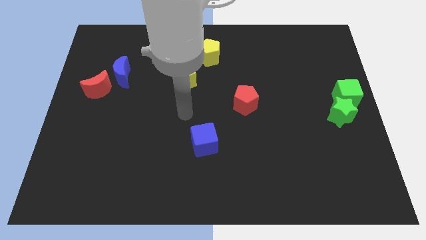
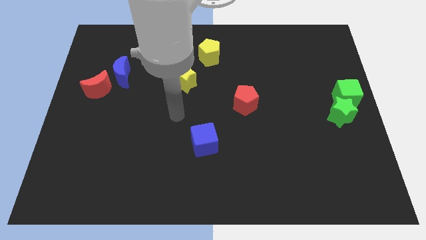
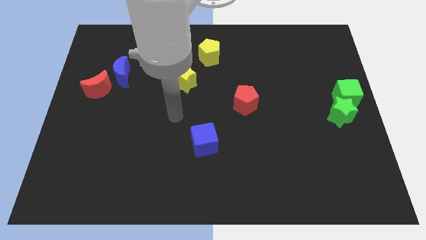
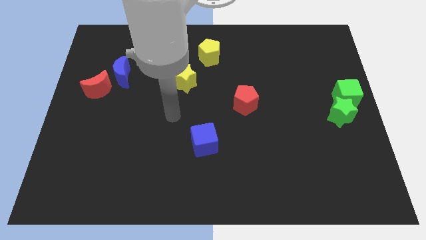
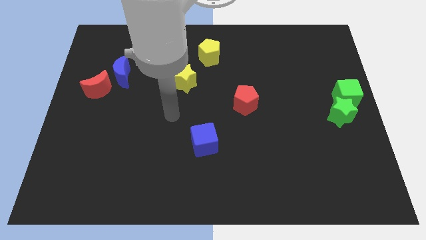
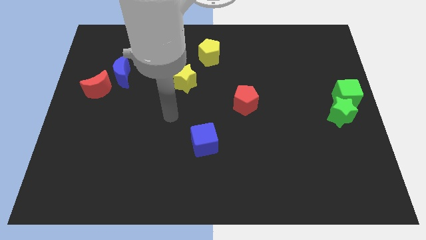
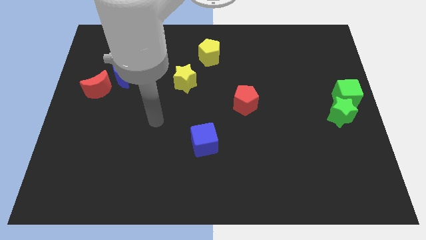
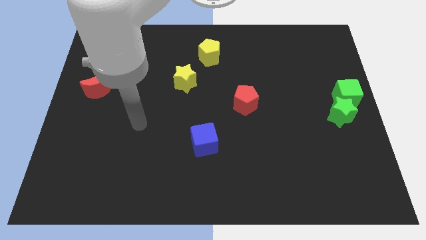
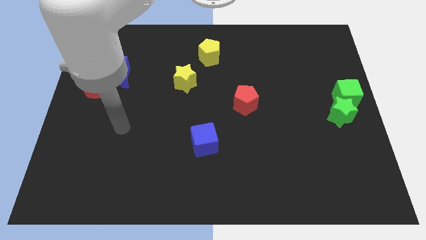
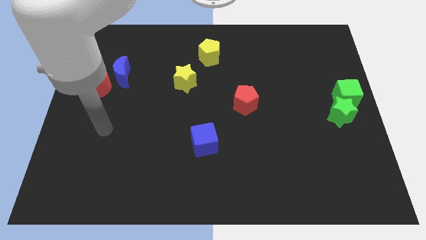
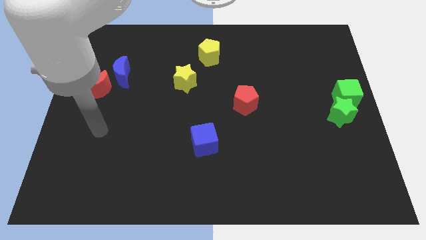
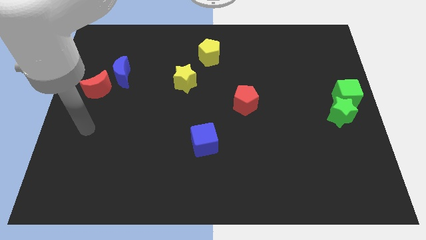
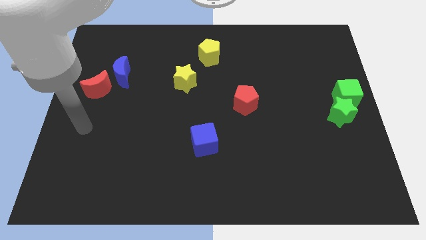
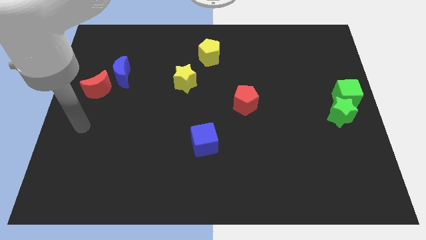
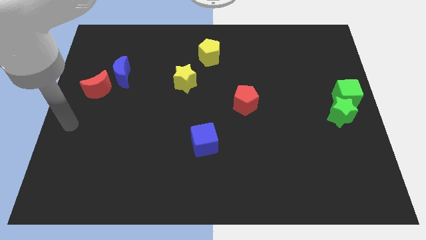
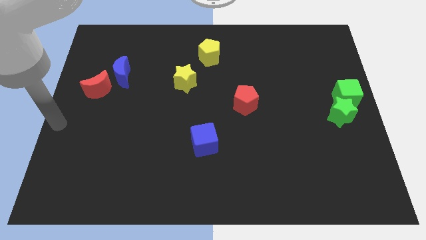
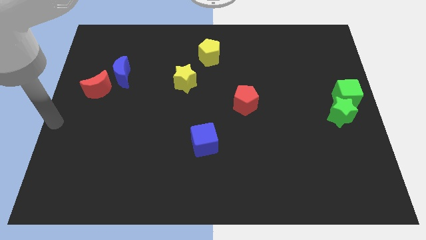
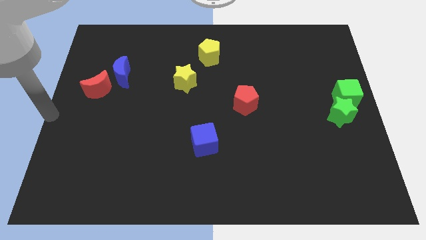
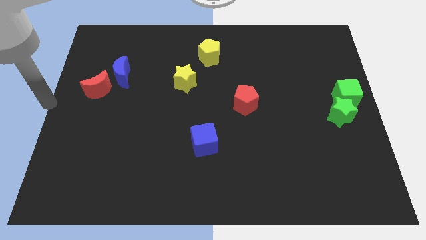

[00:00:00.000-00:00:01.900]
place your arm to the left center

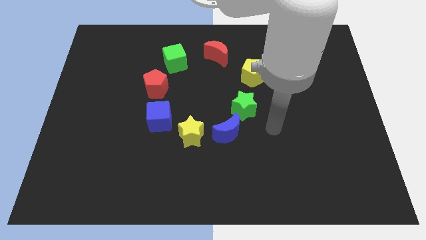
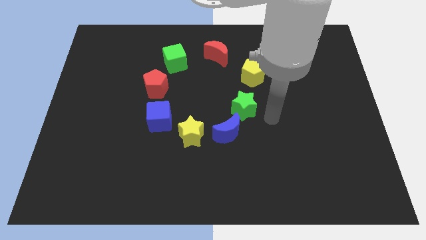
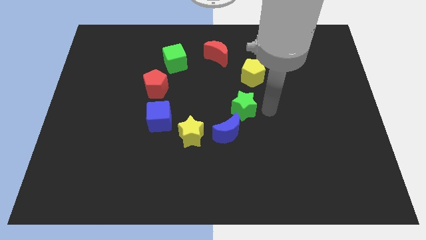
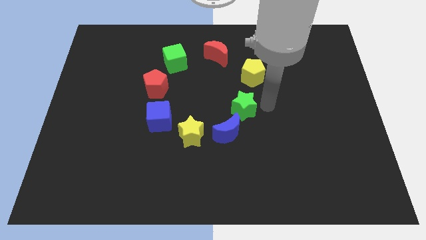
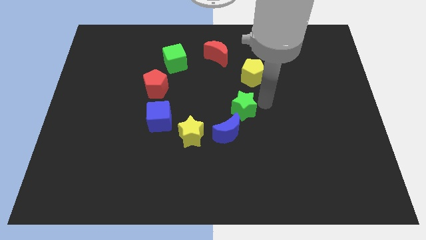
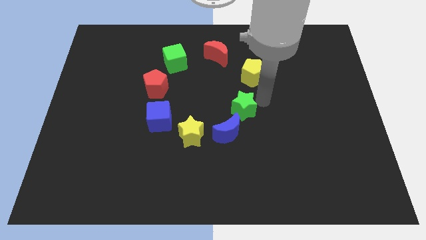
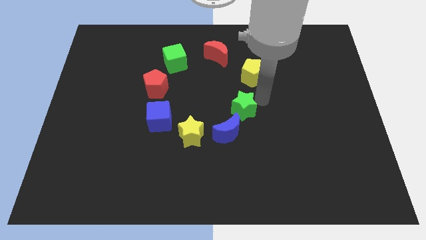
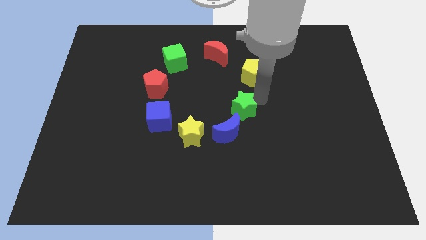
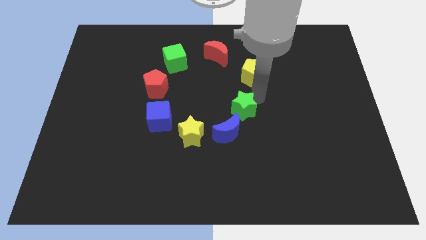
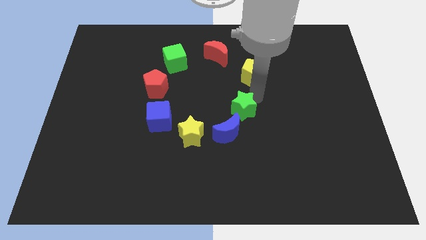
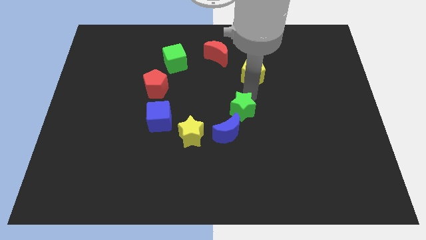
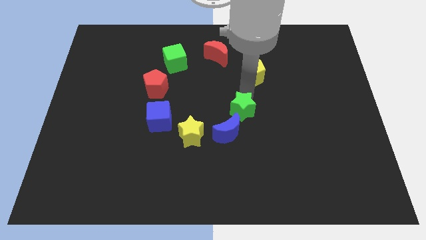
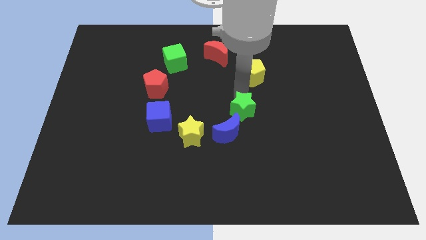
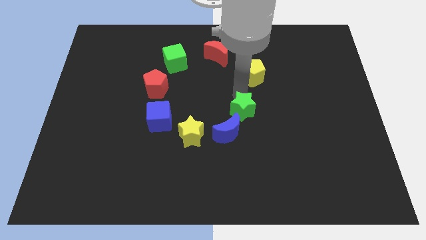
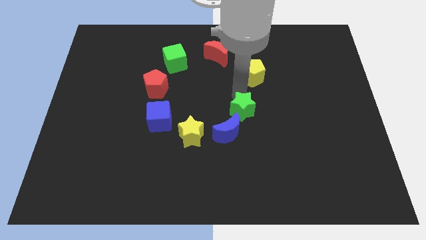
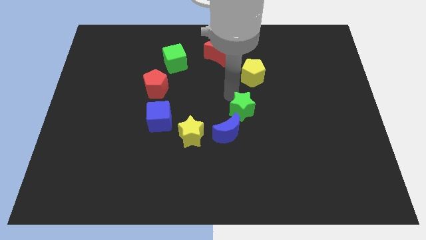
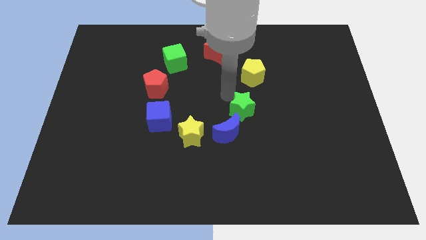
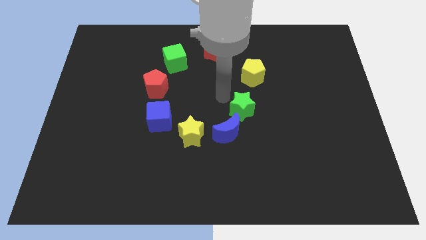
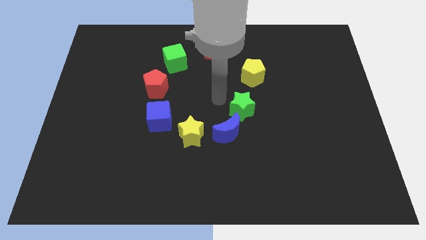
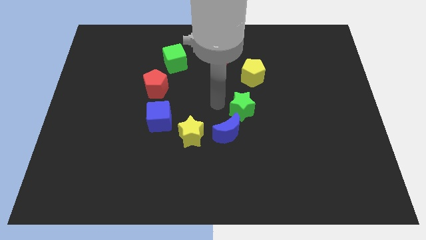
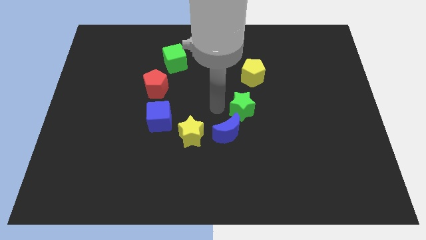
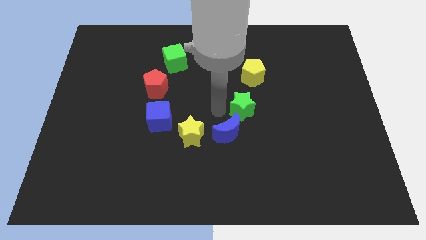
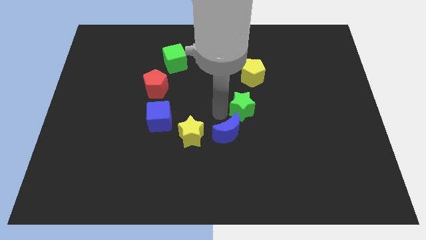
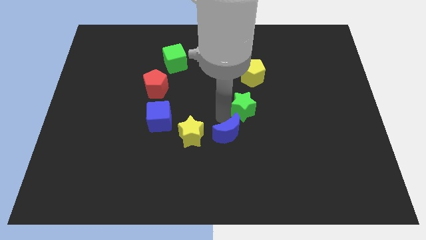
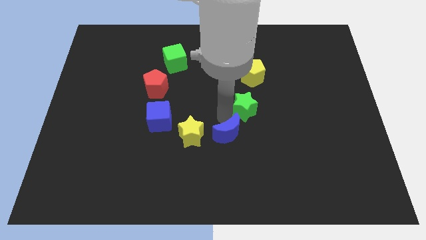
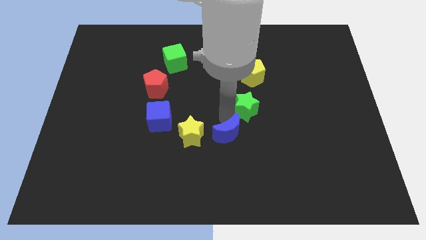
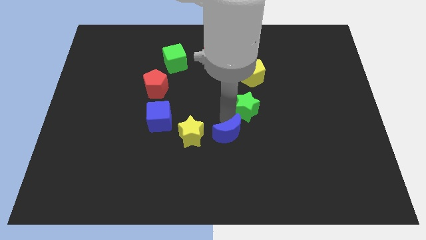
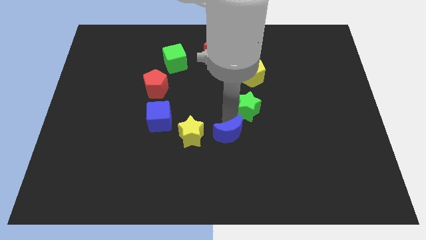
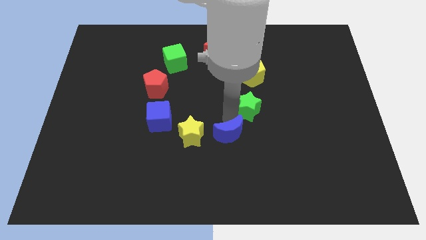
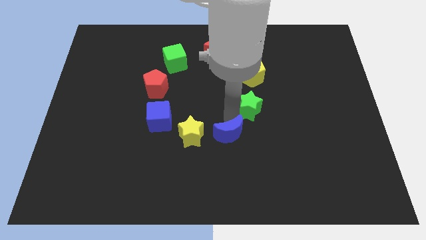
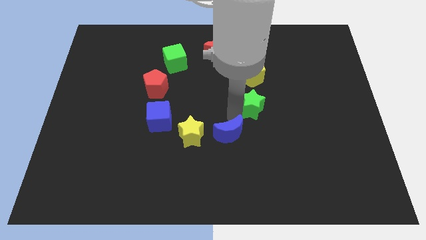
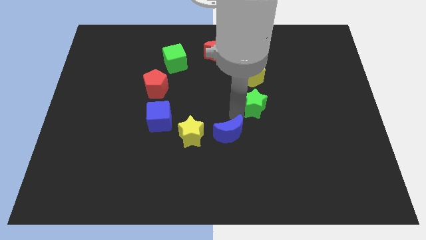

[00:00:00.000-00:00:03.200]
adjust the green star to form a circle

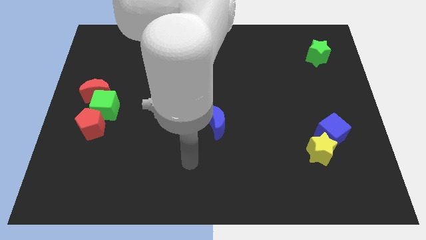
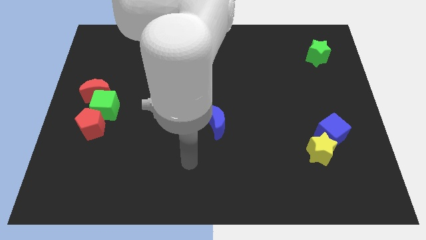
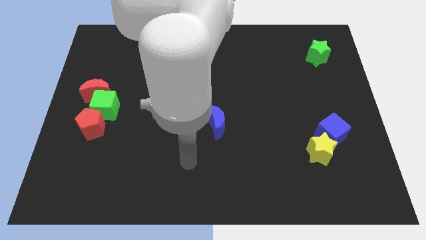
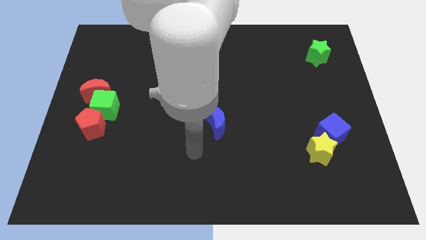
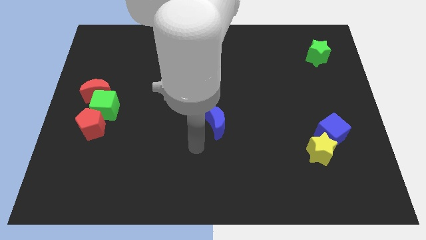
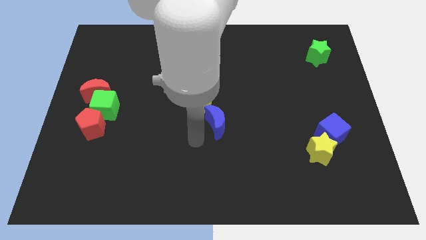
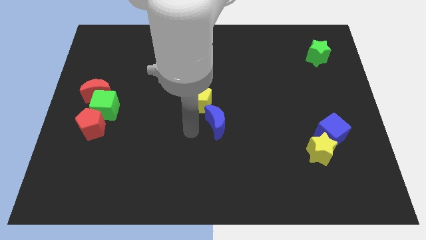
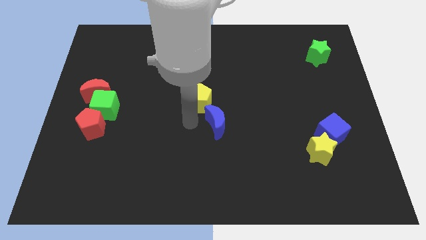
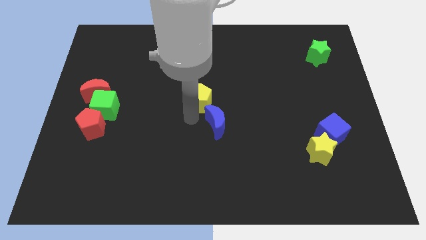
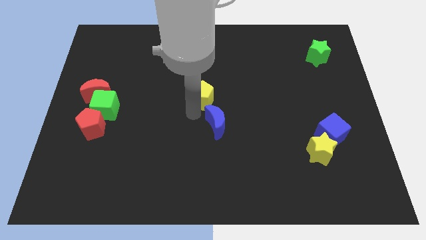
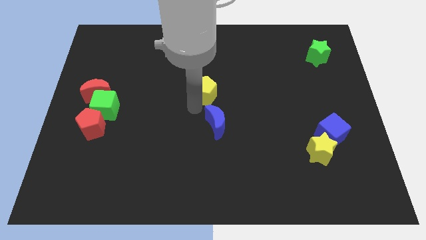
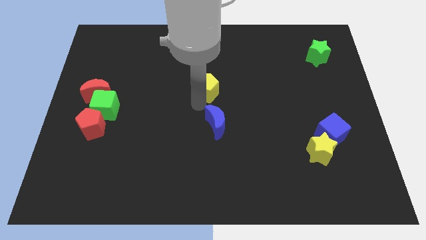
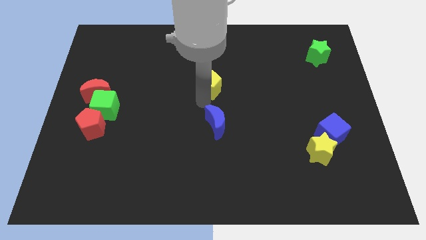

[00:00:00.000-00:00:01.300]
push the yellow pentagon slightly to the top

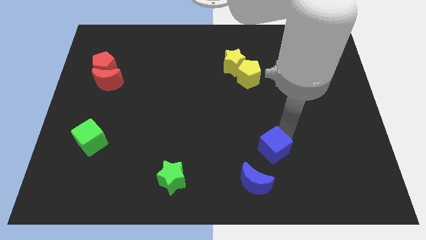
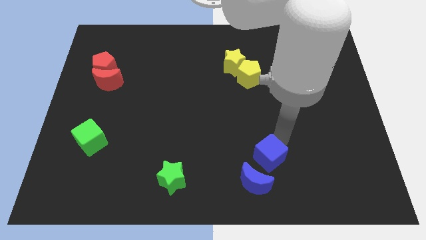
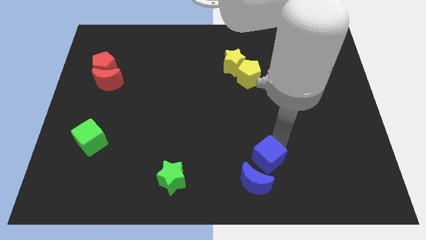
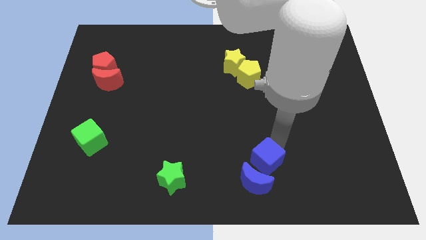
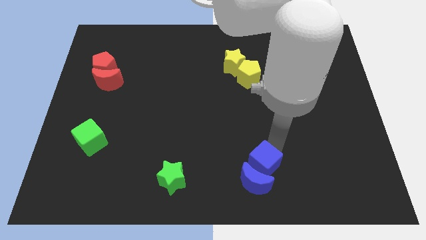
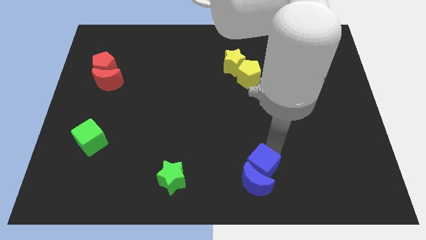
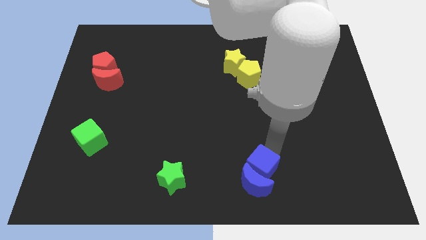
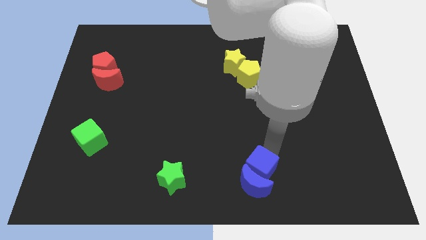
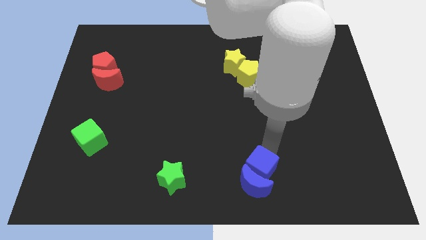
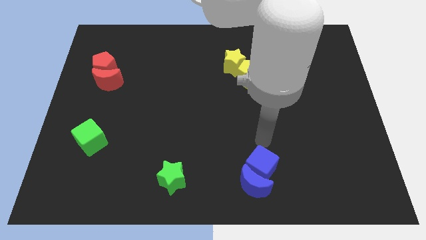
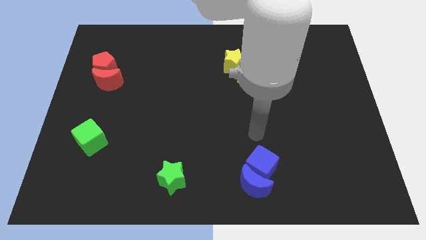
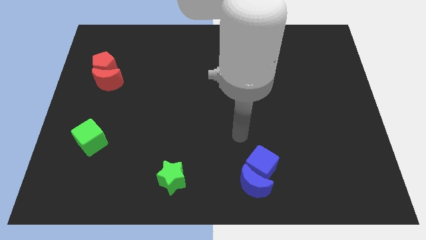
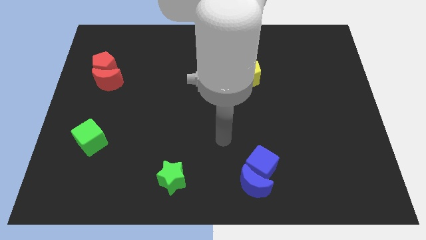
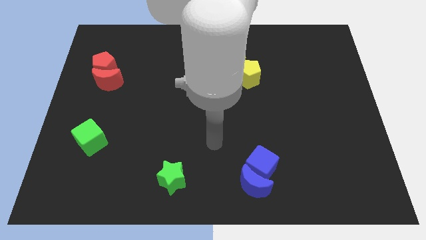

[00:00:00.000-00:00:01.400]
push the blue cube into the blue moon

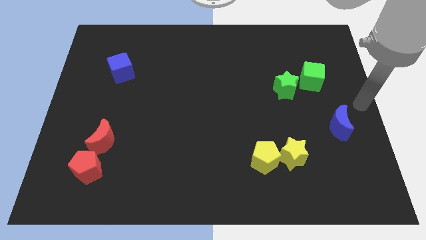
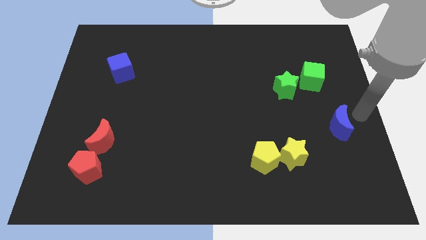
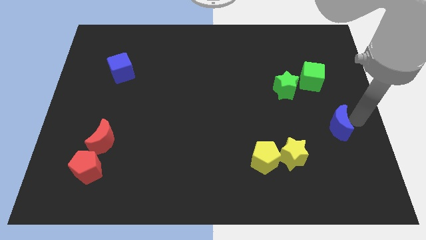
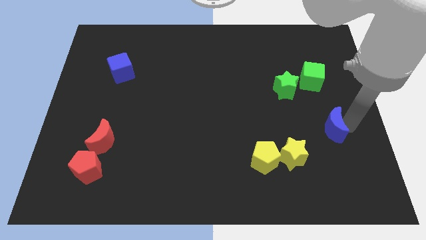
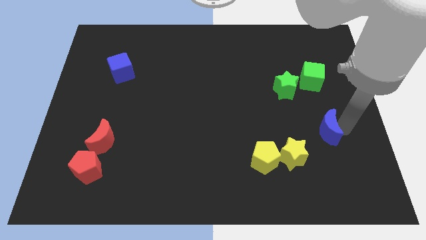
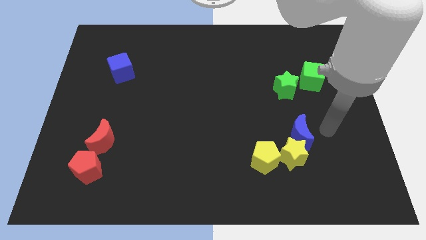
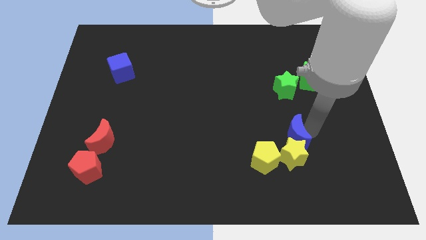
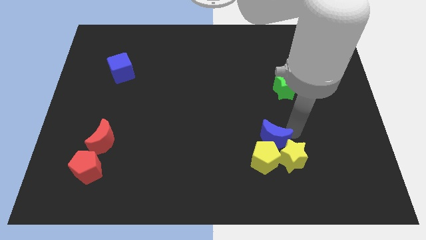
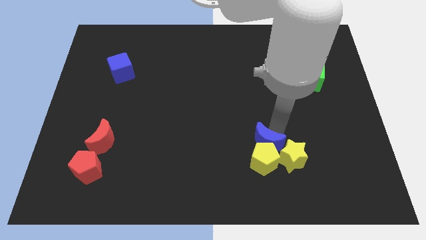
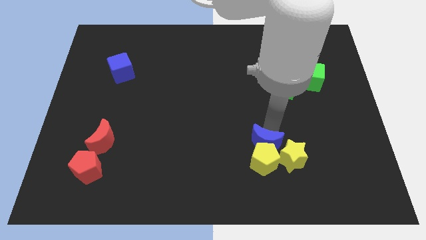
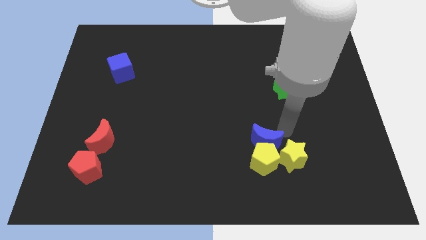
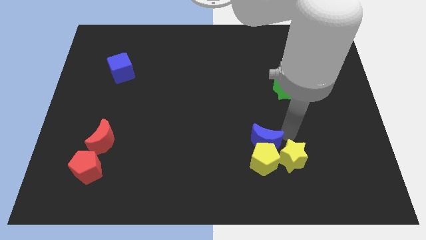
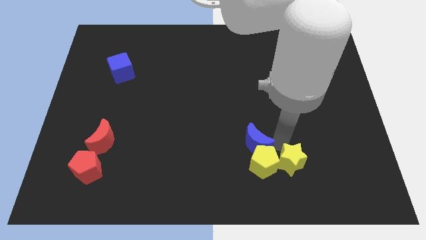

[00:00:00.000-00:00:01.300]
place the blue moon above the yellow pentagon
